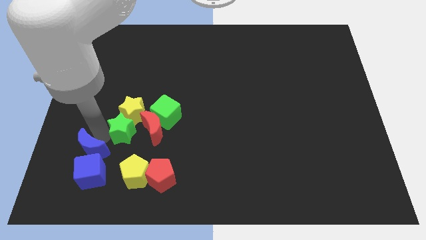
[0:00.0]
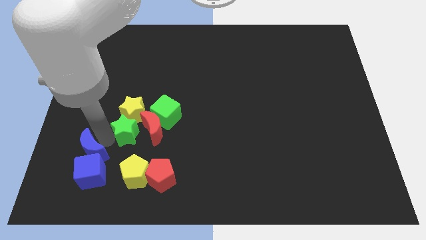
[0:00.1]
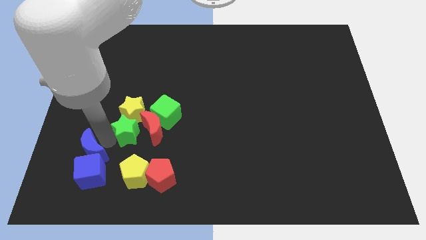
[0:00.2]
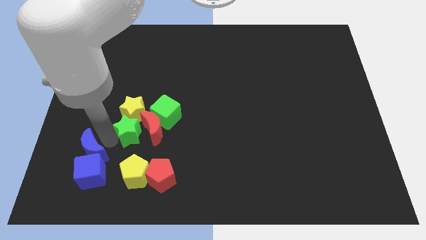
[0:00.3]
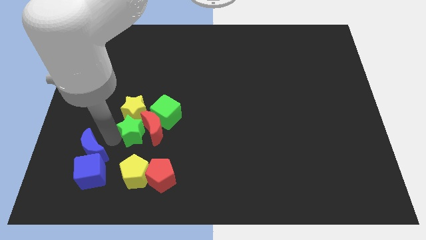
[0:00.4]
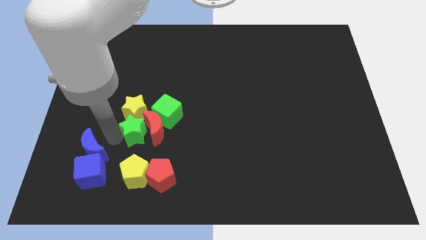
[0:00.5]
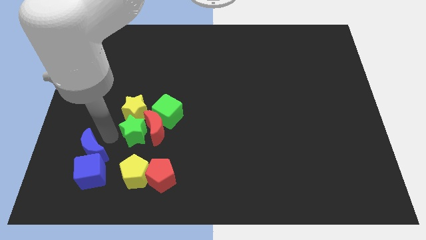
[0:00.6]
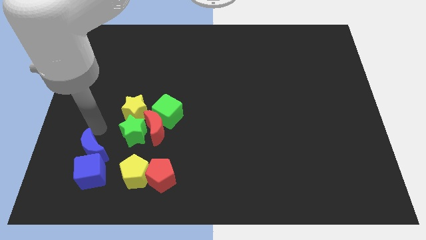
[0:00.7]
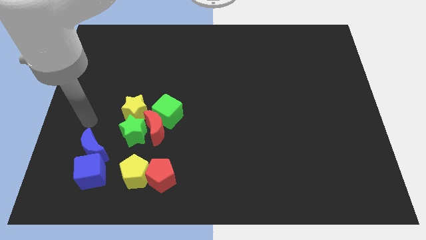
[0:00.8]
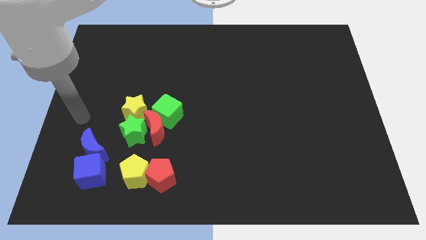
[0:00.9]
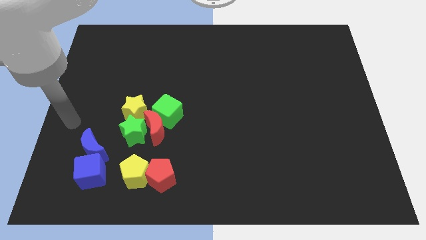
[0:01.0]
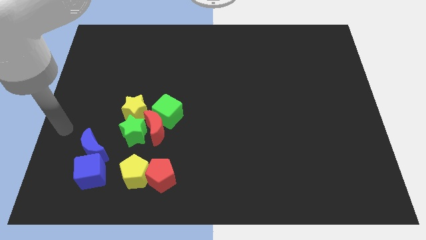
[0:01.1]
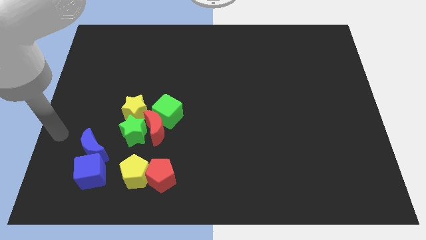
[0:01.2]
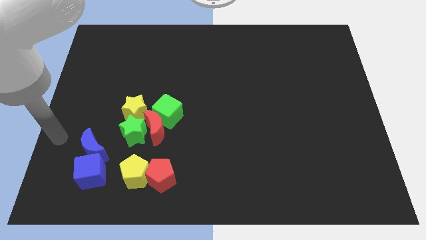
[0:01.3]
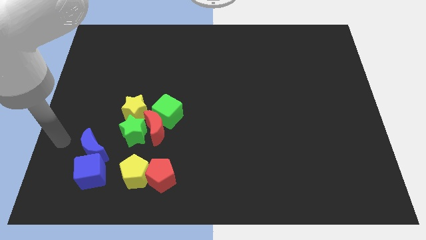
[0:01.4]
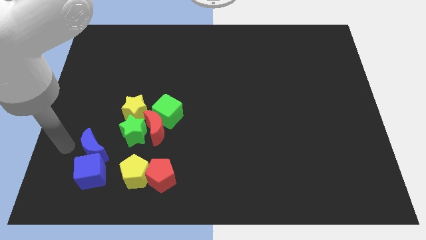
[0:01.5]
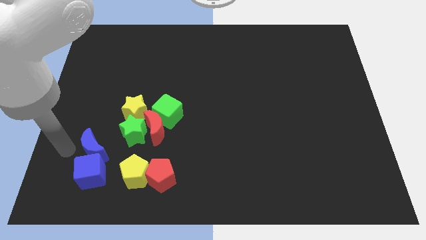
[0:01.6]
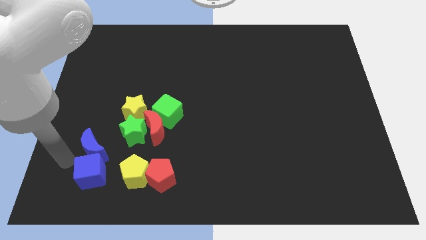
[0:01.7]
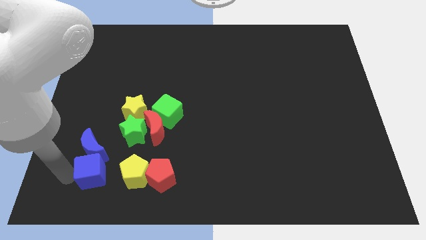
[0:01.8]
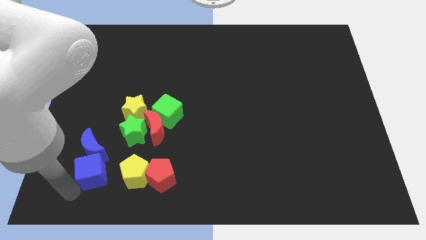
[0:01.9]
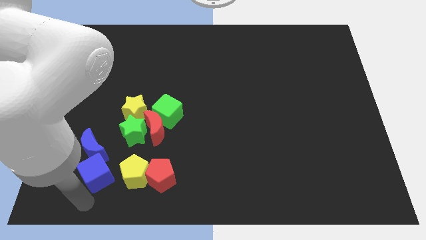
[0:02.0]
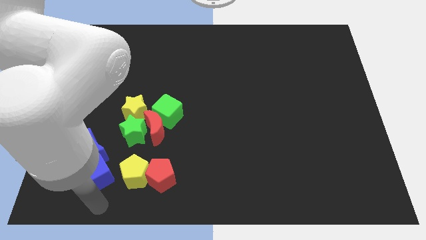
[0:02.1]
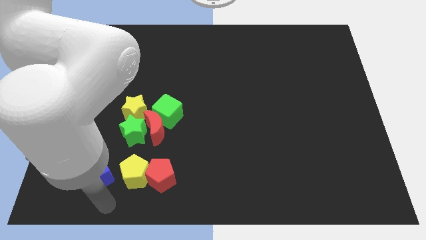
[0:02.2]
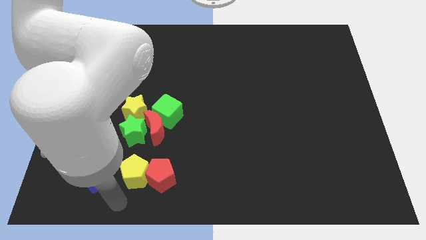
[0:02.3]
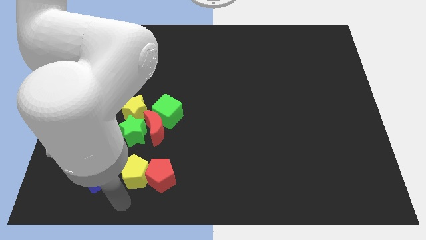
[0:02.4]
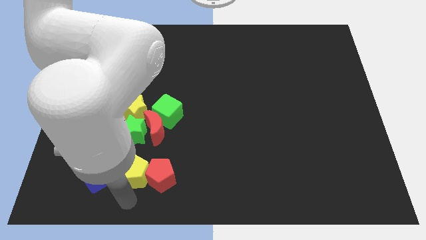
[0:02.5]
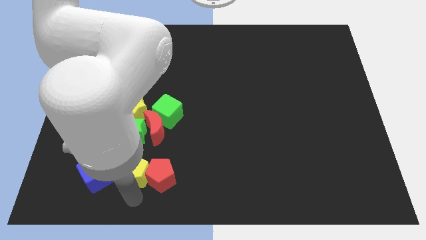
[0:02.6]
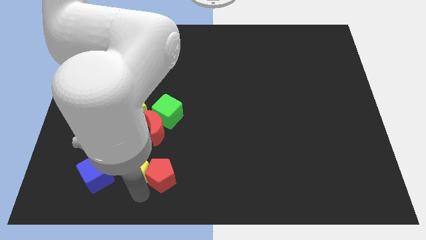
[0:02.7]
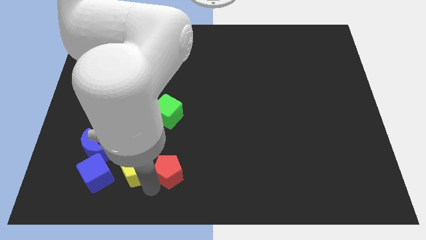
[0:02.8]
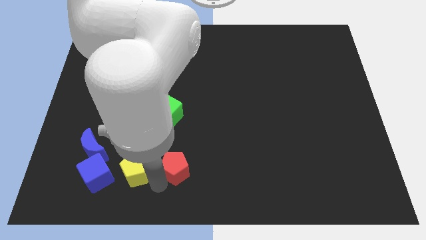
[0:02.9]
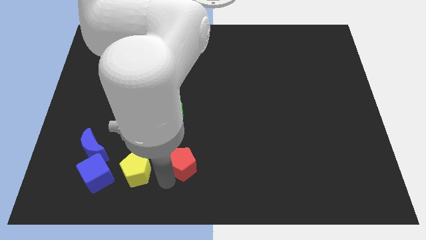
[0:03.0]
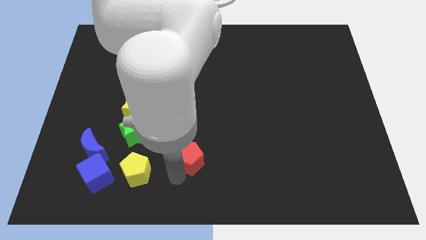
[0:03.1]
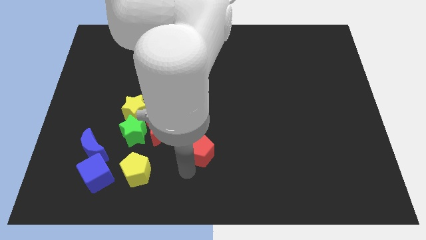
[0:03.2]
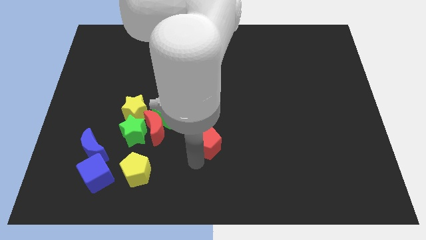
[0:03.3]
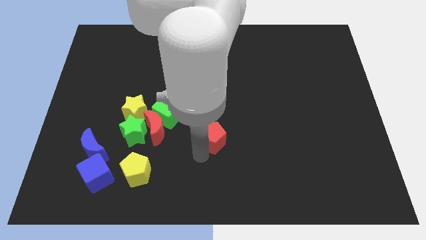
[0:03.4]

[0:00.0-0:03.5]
move the red pentagon away from the yellow pentagon

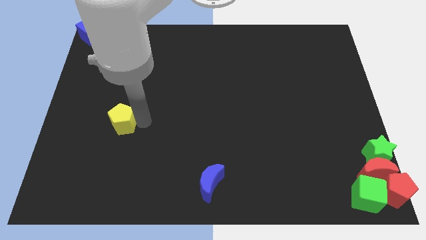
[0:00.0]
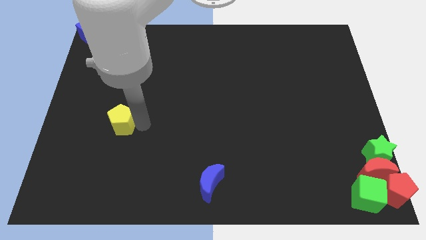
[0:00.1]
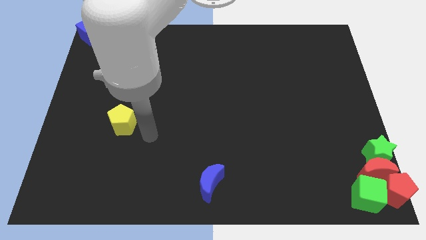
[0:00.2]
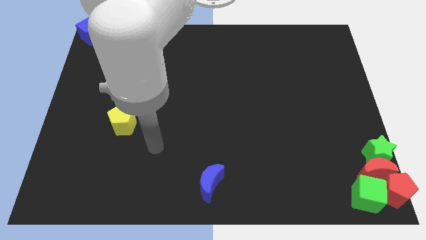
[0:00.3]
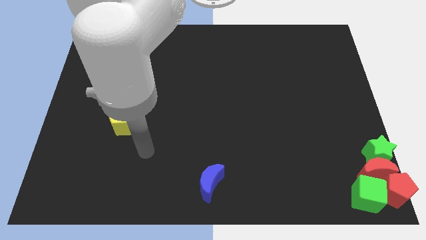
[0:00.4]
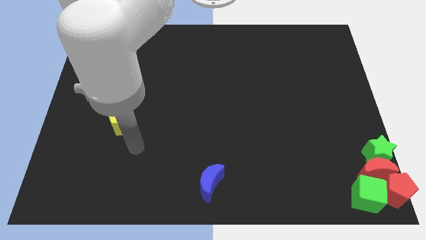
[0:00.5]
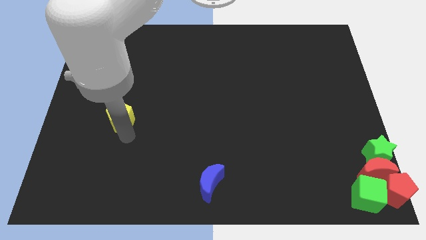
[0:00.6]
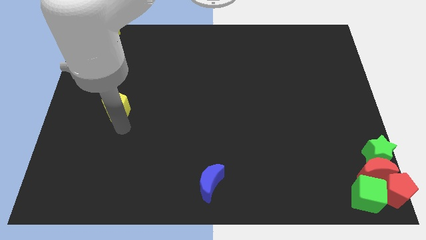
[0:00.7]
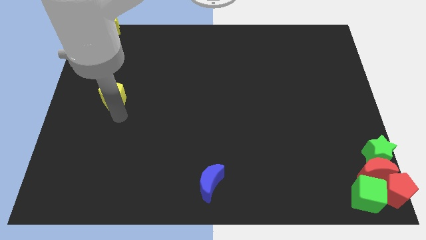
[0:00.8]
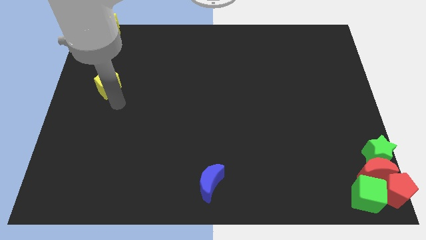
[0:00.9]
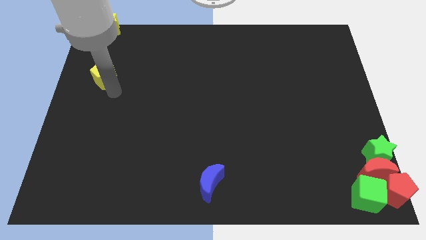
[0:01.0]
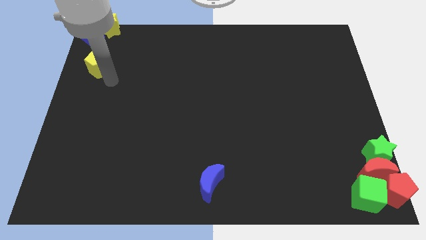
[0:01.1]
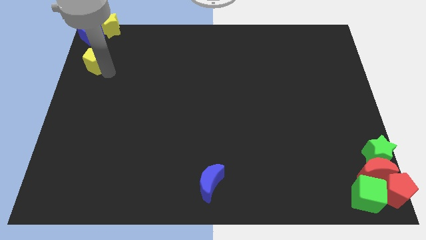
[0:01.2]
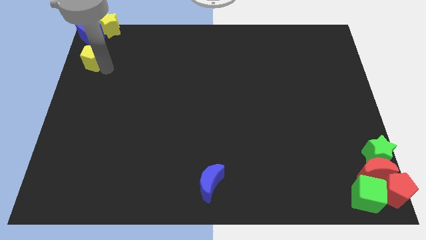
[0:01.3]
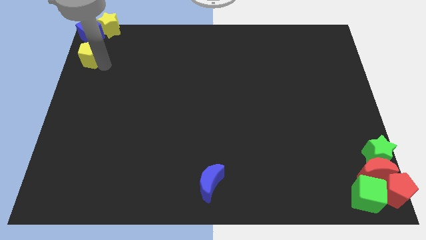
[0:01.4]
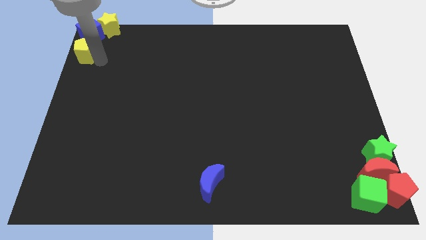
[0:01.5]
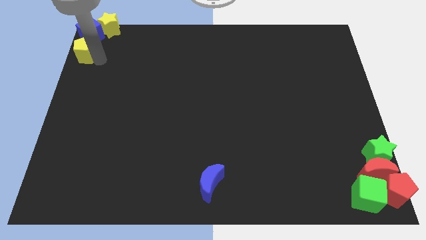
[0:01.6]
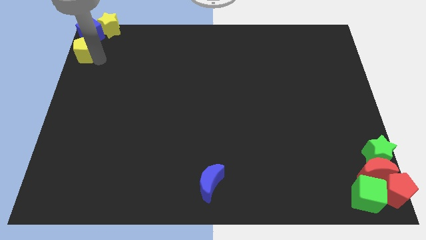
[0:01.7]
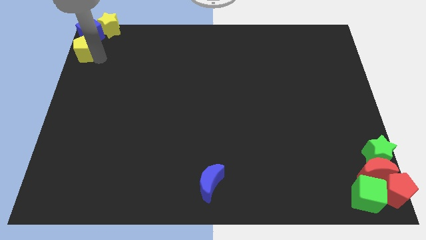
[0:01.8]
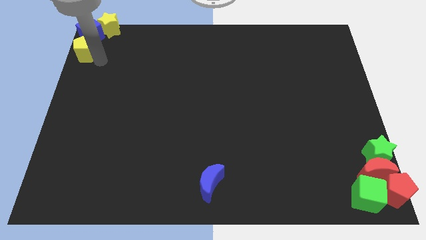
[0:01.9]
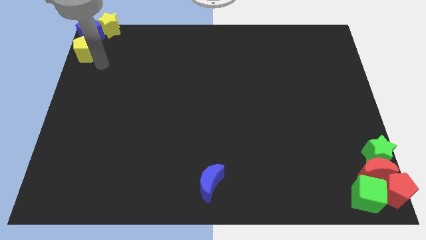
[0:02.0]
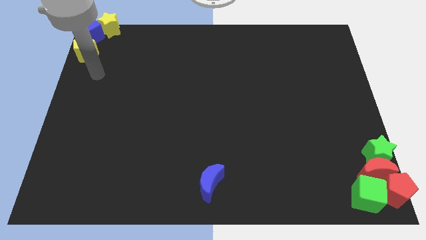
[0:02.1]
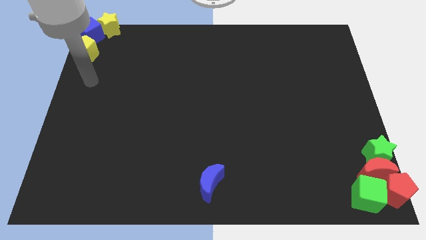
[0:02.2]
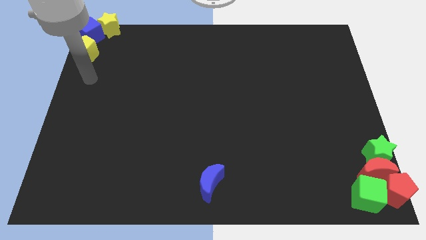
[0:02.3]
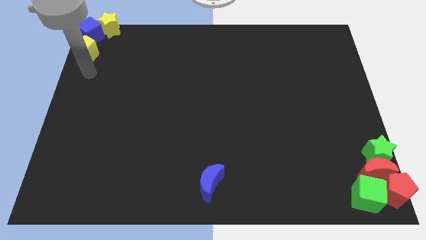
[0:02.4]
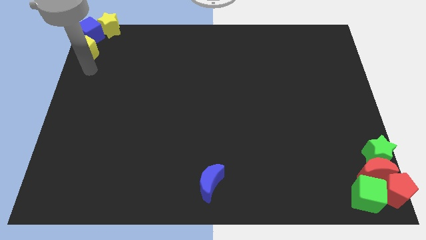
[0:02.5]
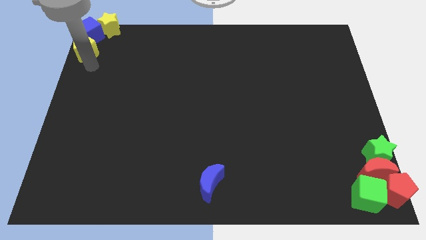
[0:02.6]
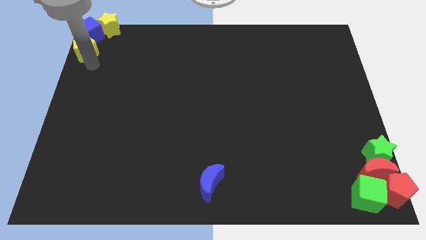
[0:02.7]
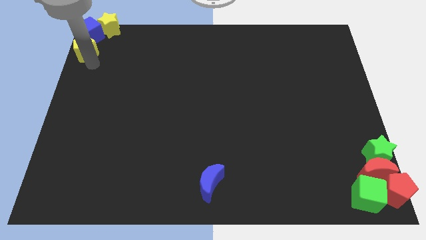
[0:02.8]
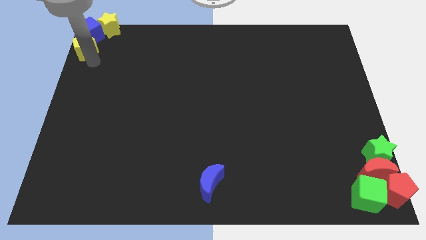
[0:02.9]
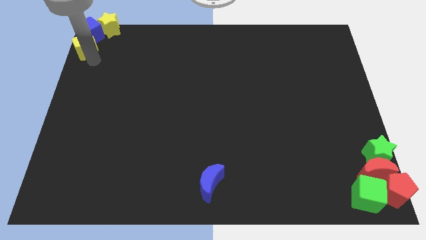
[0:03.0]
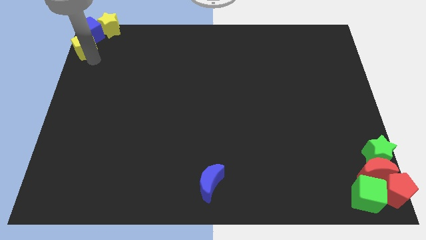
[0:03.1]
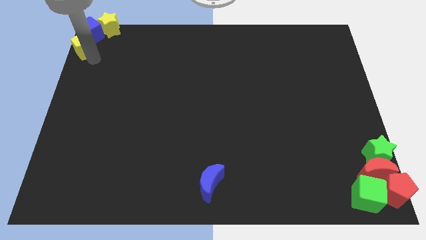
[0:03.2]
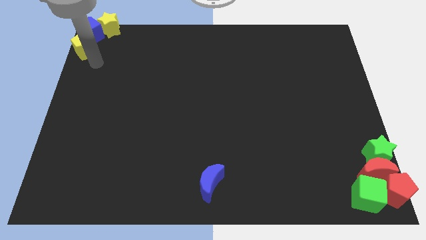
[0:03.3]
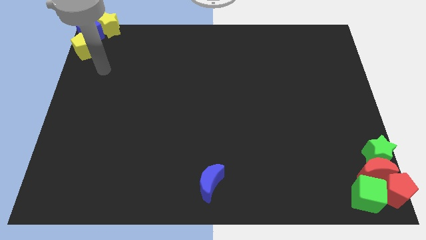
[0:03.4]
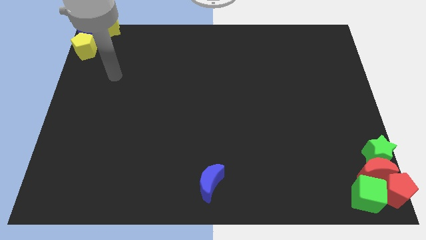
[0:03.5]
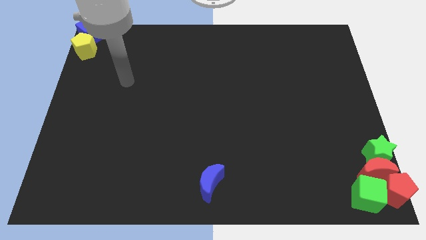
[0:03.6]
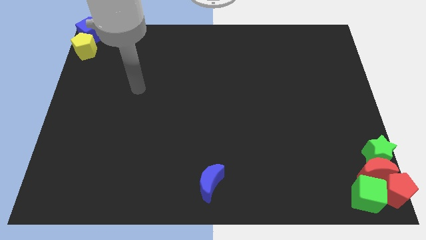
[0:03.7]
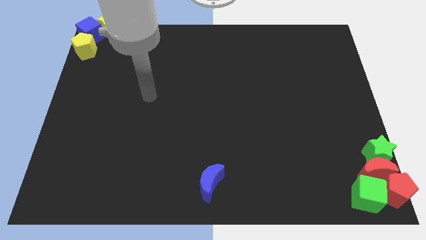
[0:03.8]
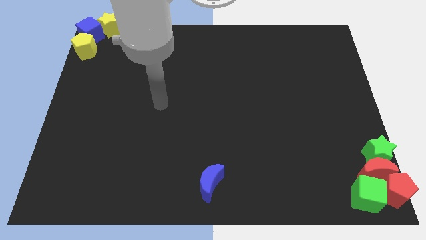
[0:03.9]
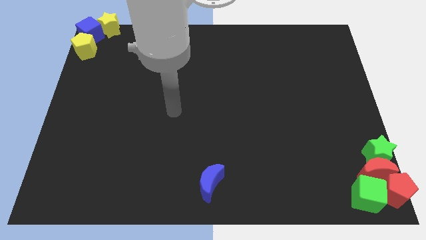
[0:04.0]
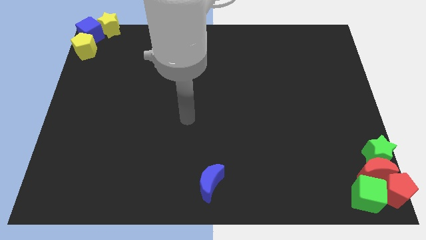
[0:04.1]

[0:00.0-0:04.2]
push the yellow pentagon into the blue cube

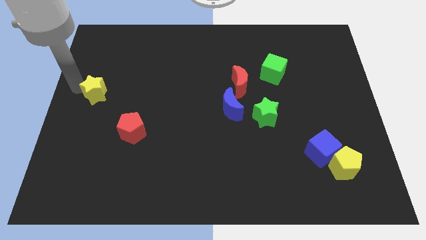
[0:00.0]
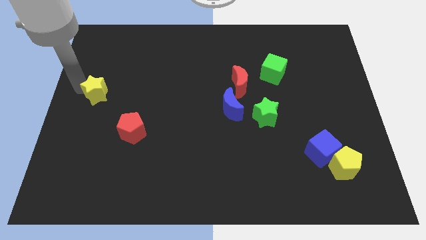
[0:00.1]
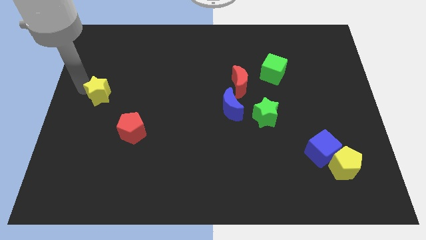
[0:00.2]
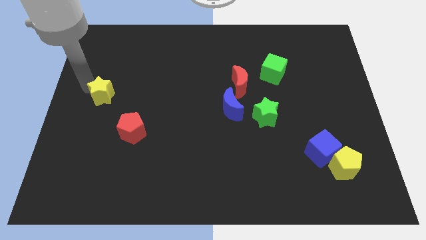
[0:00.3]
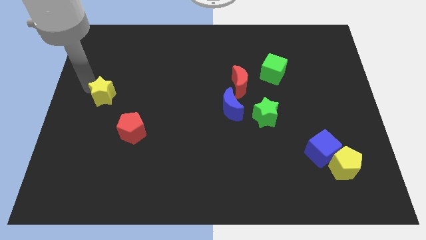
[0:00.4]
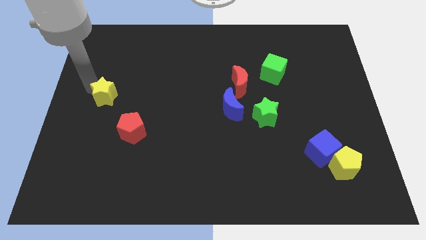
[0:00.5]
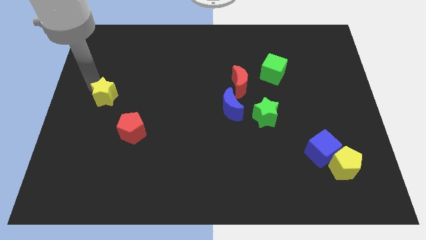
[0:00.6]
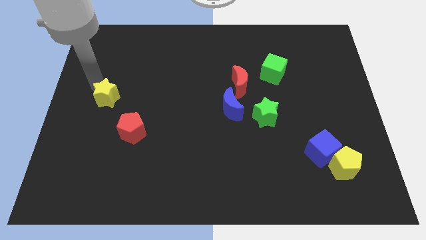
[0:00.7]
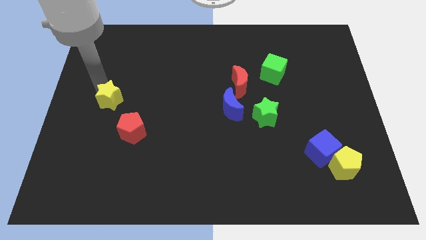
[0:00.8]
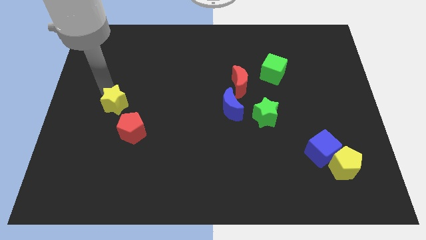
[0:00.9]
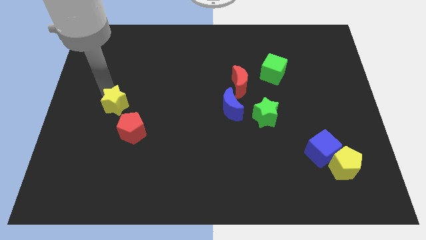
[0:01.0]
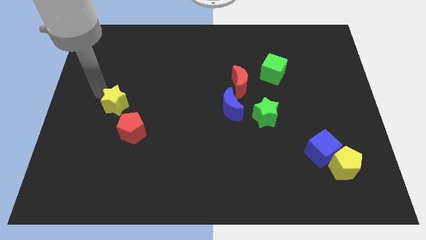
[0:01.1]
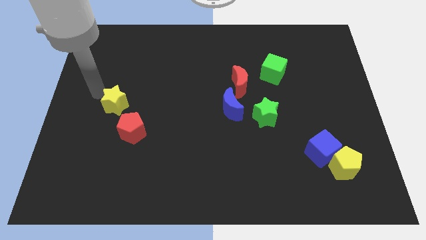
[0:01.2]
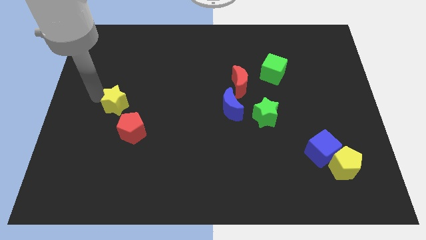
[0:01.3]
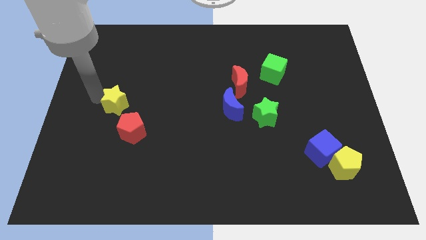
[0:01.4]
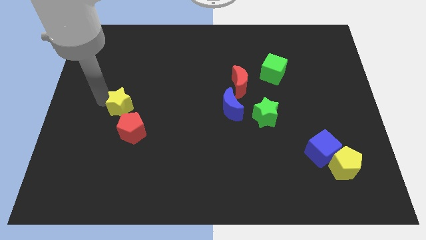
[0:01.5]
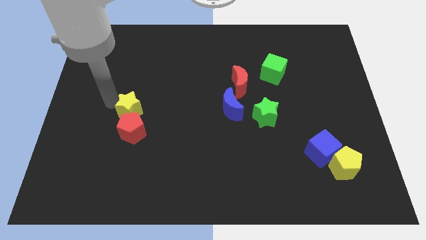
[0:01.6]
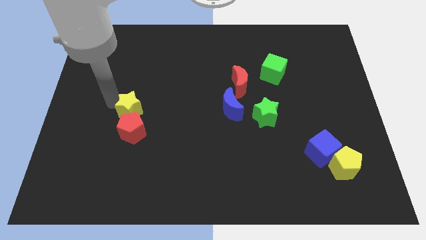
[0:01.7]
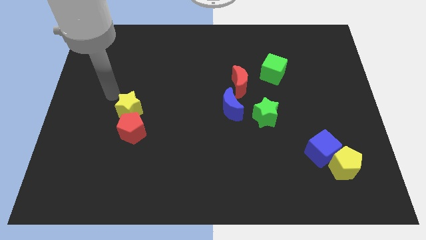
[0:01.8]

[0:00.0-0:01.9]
push the yellow star to the top of the red pentagon
